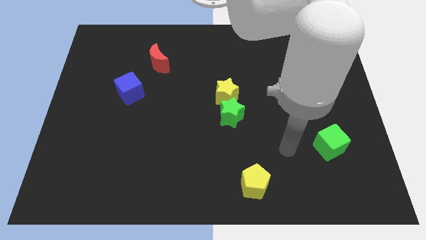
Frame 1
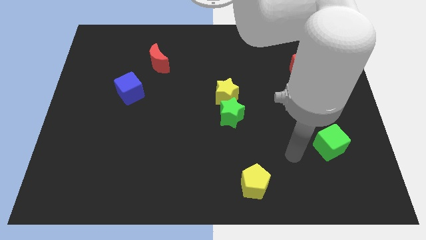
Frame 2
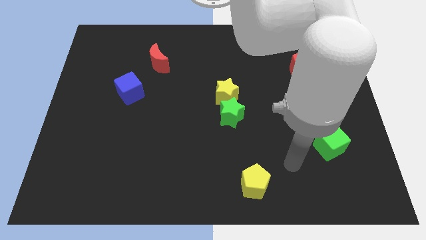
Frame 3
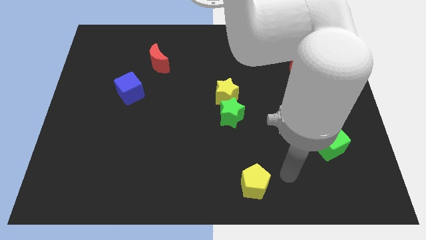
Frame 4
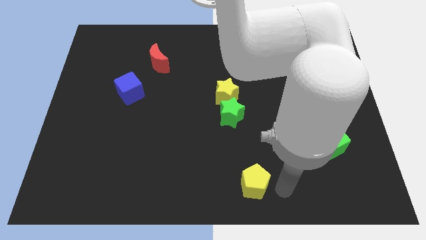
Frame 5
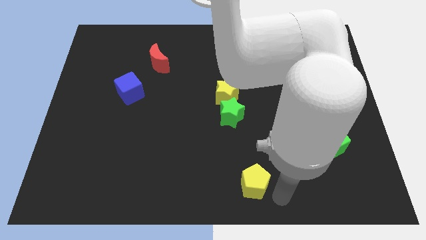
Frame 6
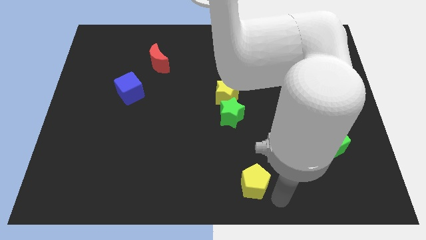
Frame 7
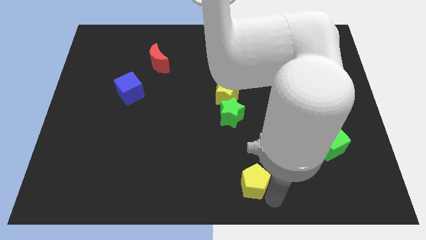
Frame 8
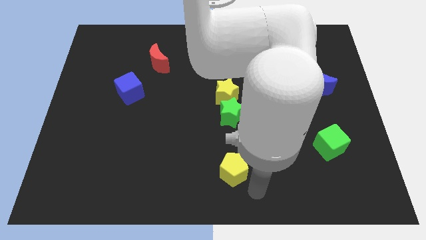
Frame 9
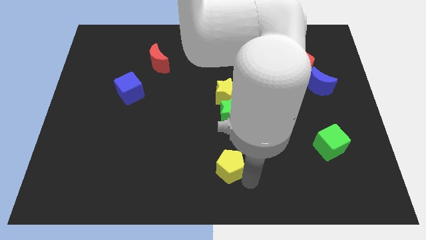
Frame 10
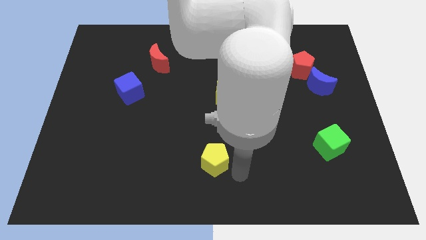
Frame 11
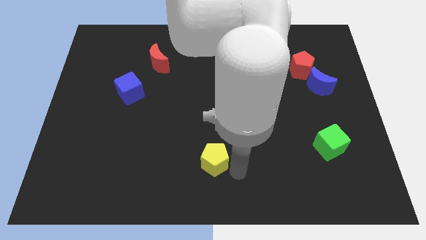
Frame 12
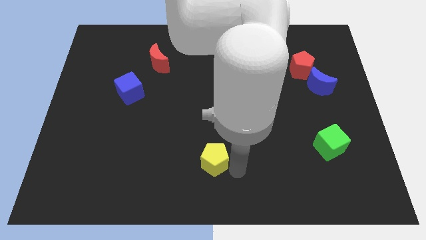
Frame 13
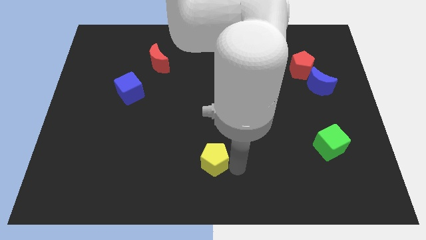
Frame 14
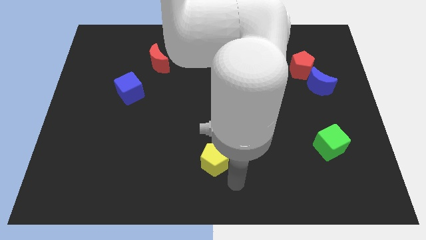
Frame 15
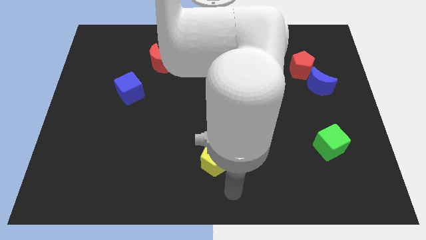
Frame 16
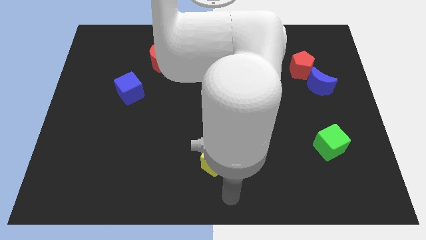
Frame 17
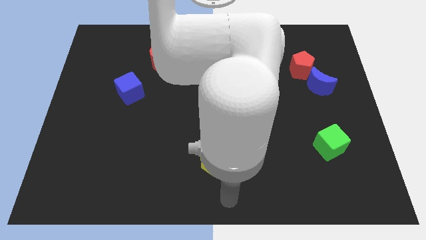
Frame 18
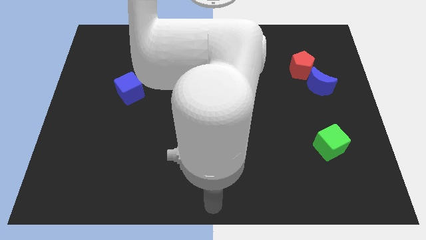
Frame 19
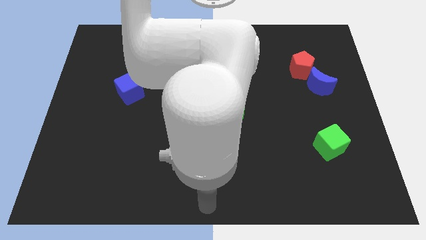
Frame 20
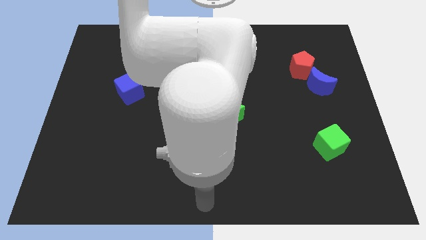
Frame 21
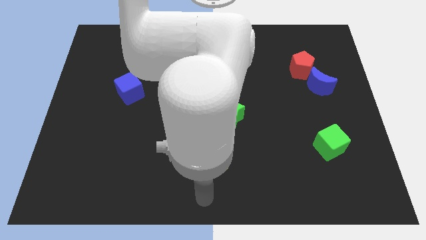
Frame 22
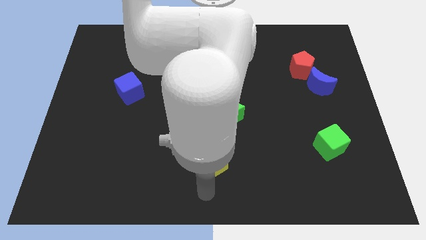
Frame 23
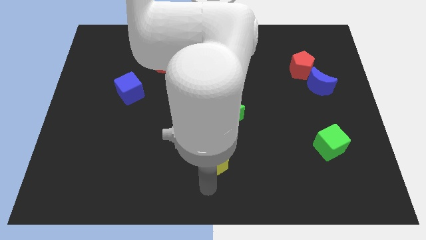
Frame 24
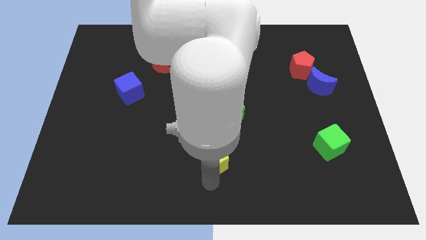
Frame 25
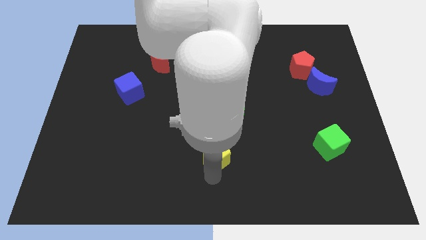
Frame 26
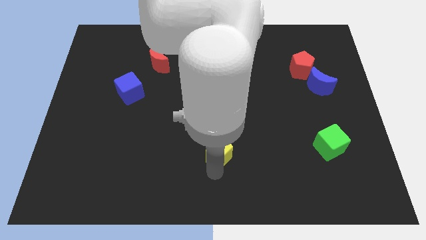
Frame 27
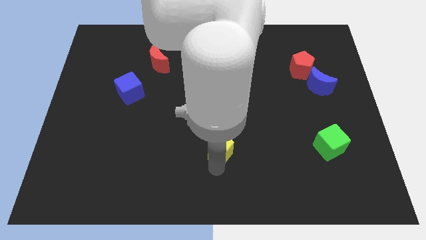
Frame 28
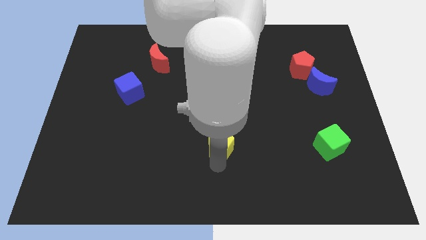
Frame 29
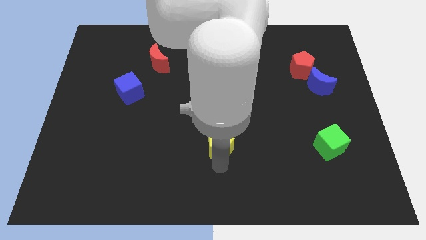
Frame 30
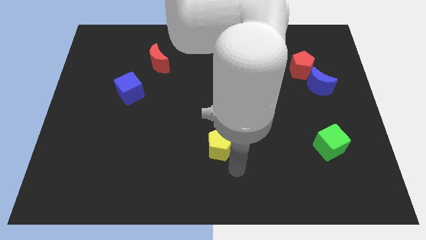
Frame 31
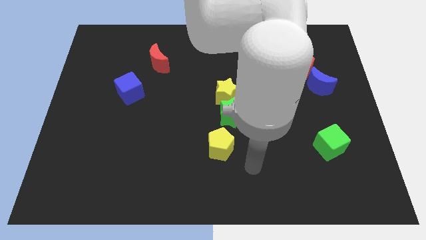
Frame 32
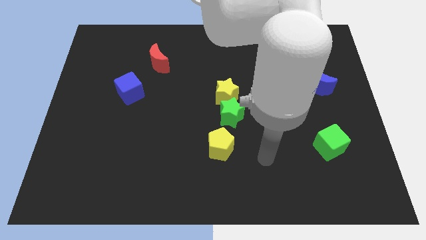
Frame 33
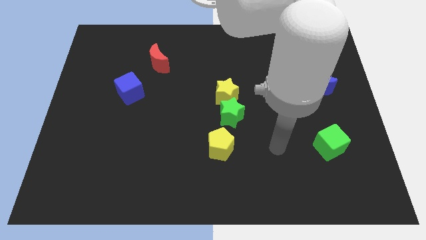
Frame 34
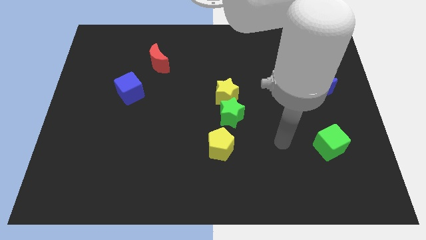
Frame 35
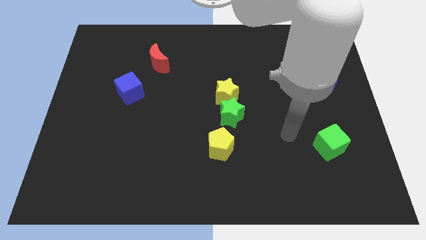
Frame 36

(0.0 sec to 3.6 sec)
move the yellow pentagon below the green star

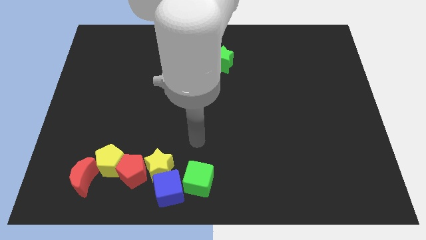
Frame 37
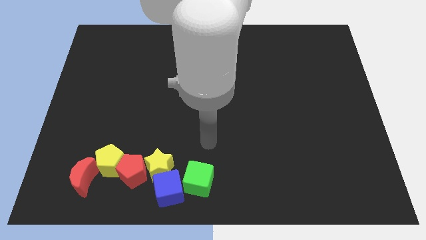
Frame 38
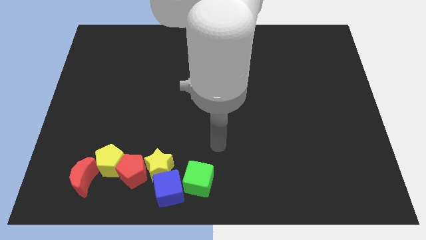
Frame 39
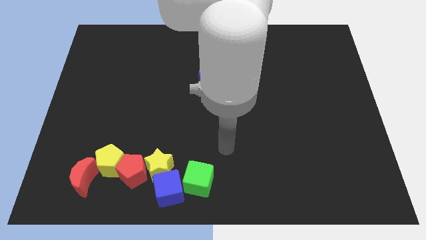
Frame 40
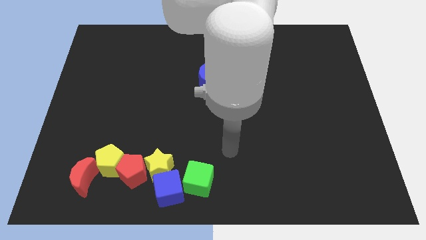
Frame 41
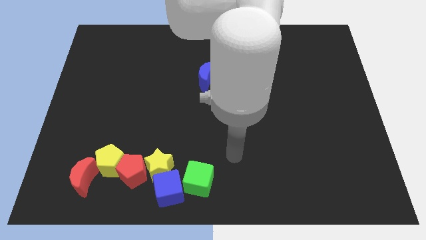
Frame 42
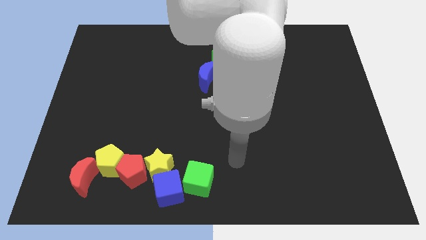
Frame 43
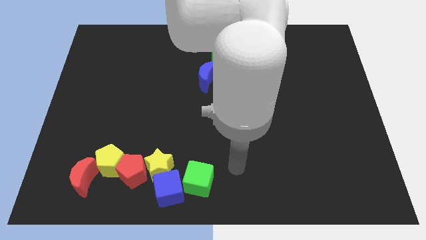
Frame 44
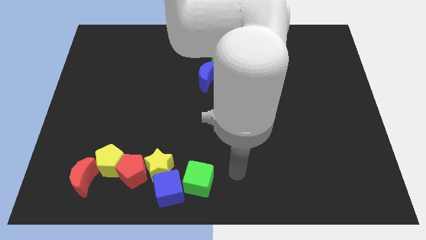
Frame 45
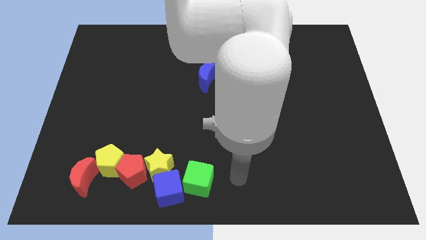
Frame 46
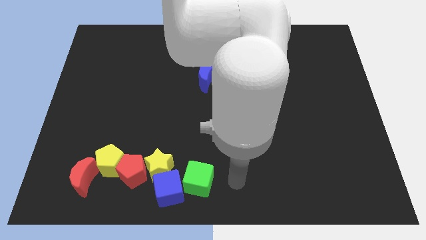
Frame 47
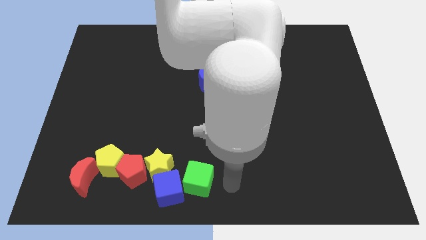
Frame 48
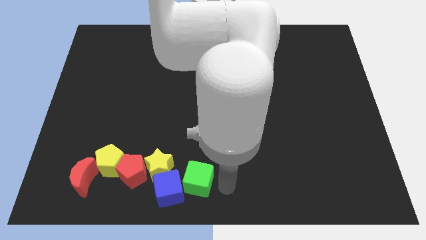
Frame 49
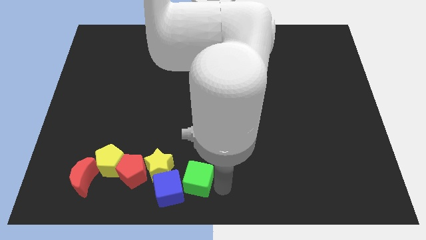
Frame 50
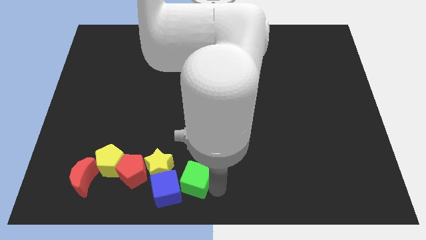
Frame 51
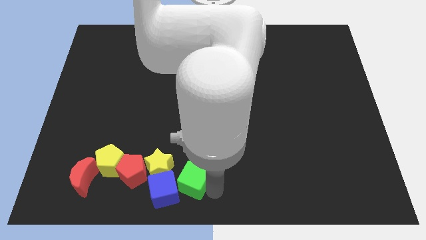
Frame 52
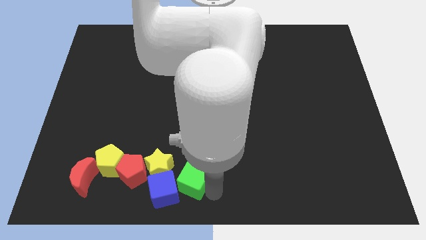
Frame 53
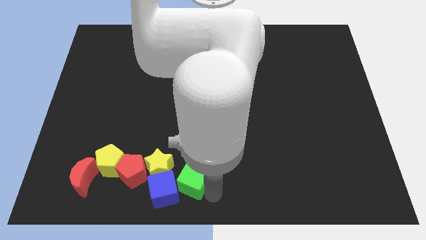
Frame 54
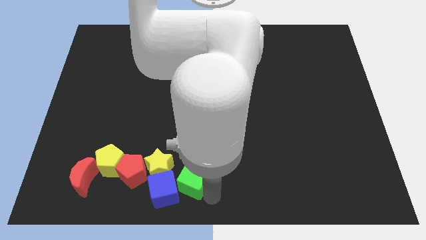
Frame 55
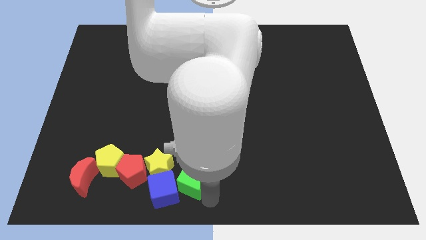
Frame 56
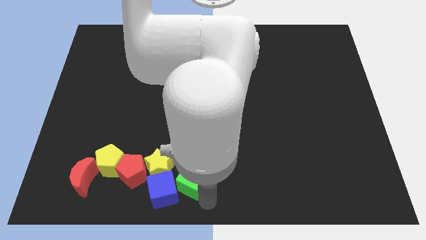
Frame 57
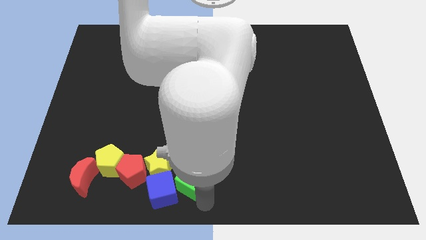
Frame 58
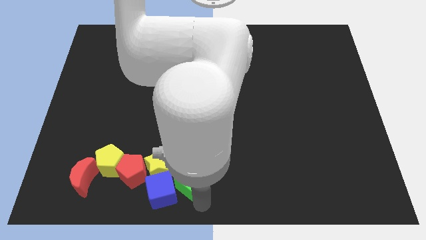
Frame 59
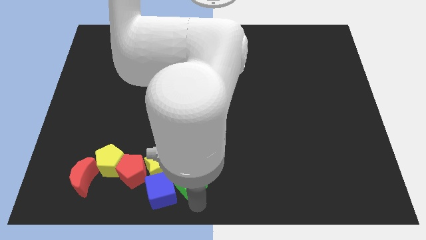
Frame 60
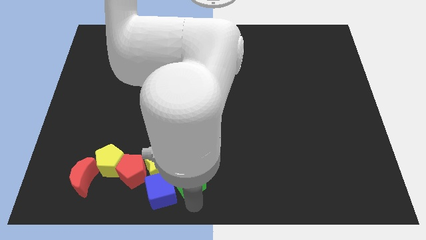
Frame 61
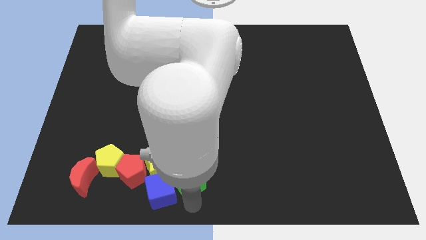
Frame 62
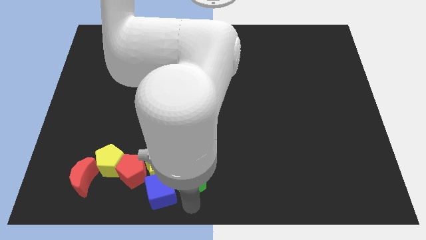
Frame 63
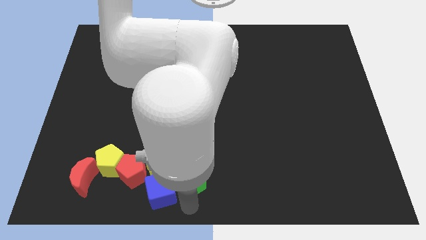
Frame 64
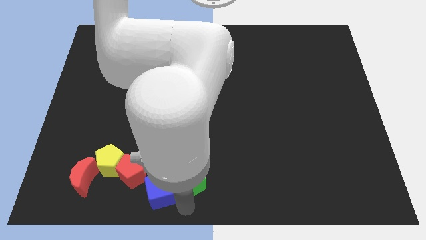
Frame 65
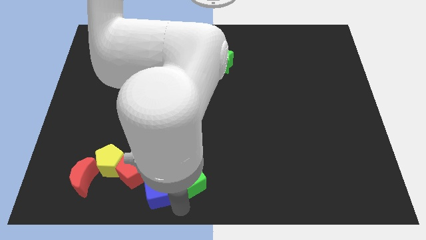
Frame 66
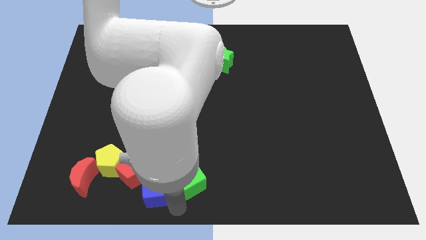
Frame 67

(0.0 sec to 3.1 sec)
slightly push green cube to the left side

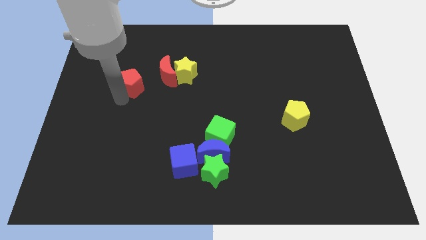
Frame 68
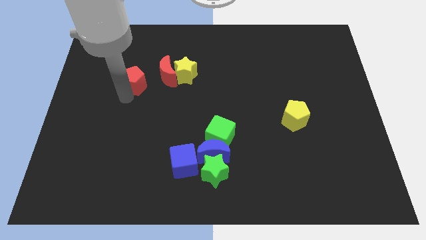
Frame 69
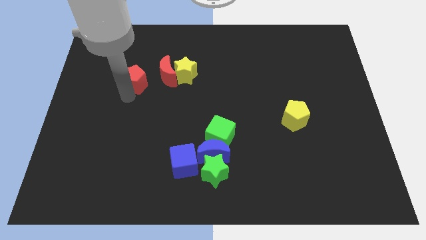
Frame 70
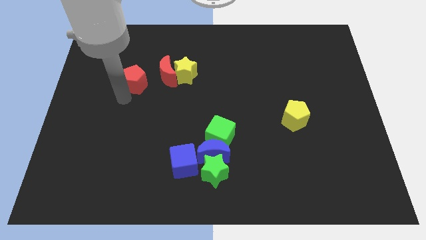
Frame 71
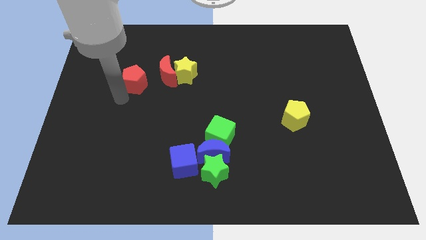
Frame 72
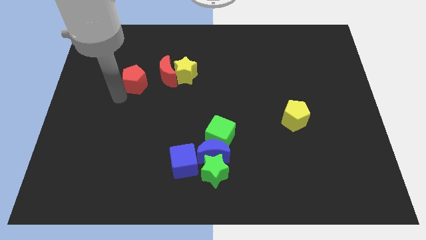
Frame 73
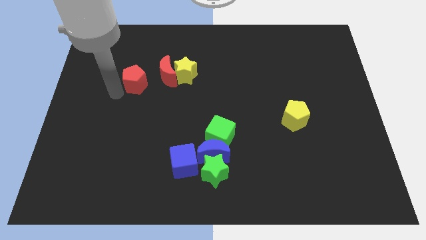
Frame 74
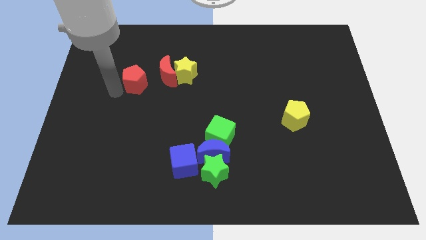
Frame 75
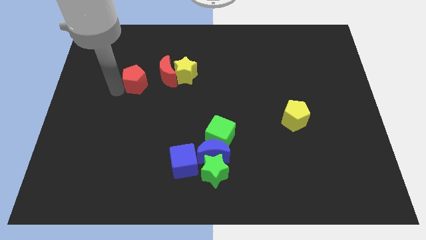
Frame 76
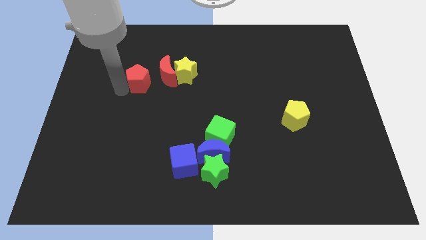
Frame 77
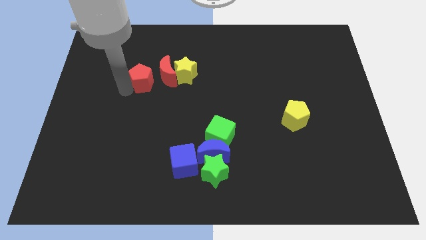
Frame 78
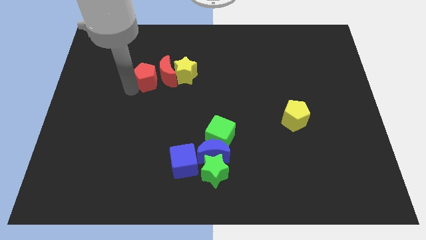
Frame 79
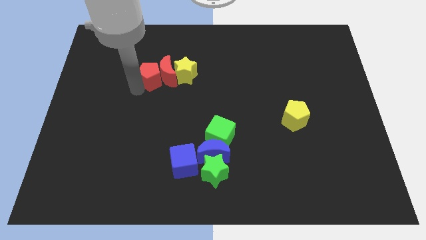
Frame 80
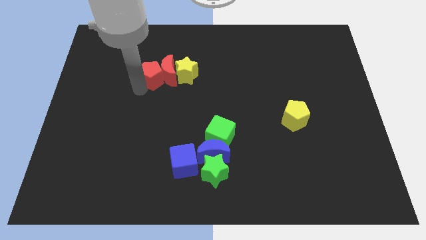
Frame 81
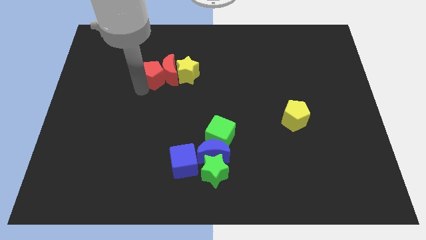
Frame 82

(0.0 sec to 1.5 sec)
drag the red pentagon to the left side of the red crescent

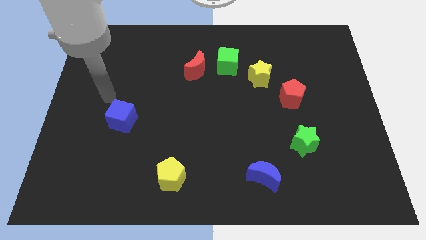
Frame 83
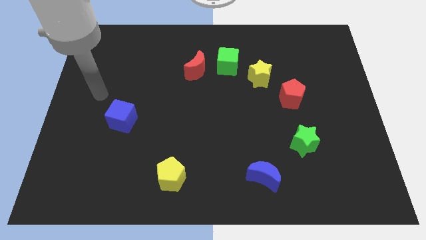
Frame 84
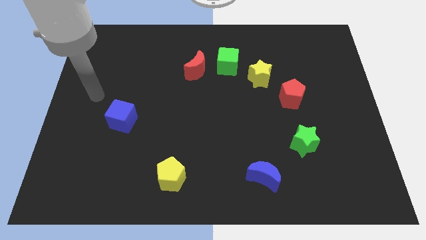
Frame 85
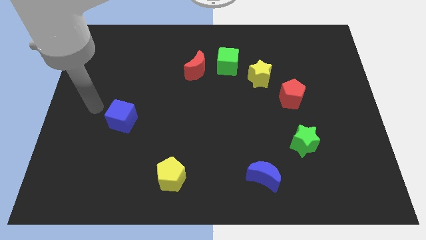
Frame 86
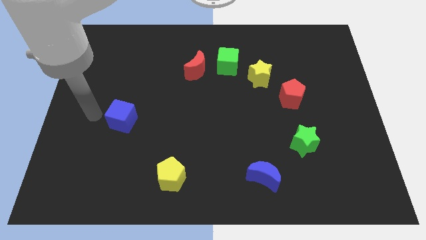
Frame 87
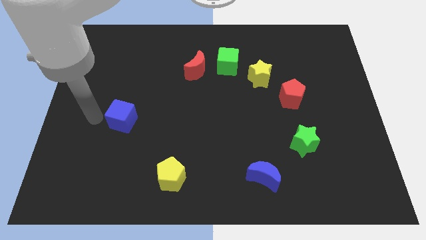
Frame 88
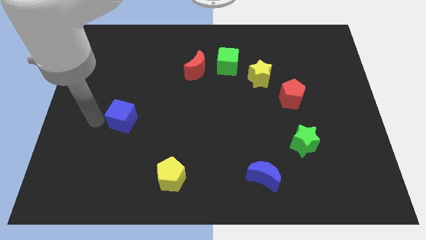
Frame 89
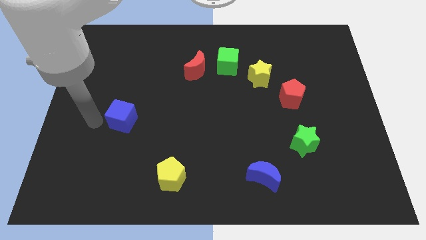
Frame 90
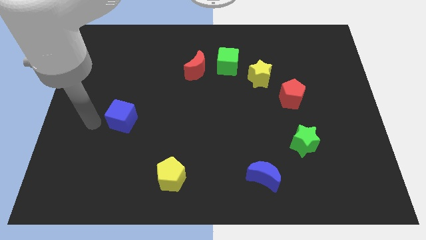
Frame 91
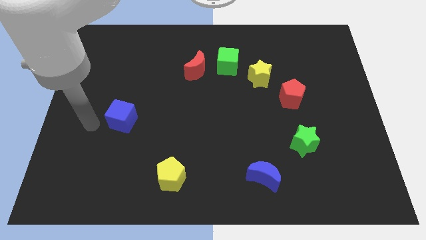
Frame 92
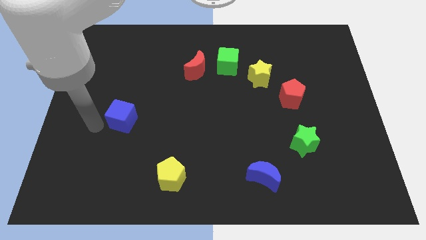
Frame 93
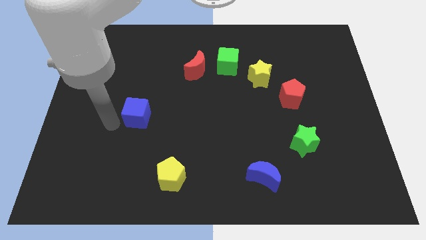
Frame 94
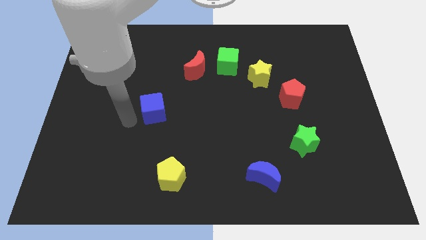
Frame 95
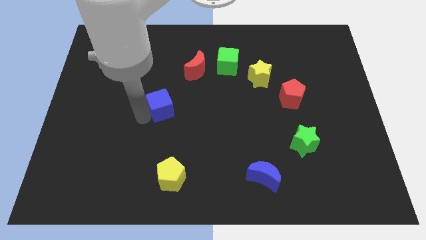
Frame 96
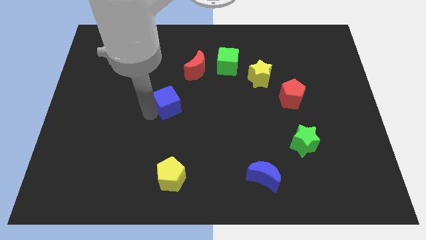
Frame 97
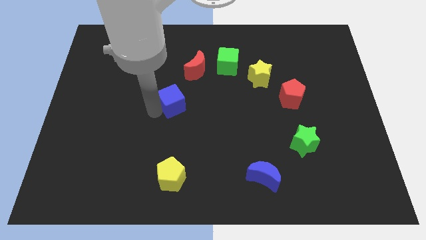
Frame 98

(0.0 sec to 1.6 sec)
place the blue cube vertically above the yellow pentagon
